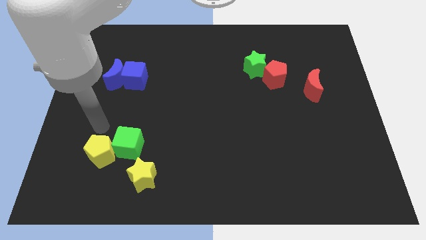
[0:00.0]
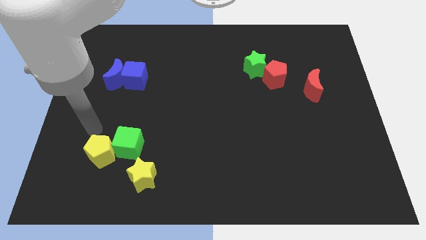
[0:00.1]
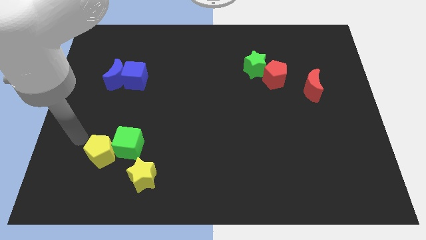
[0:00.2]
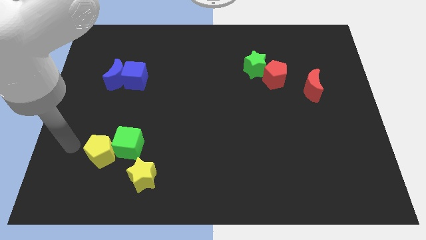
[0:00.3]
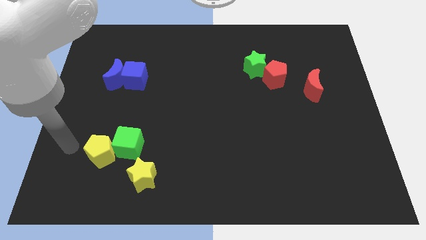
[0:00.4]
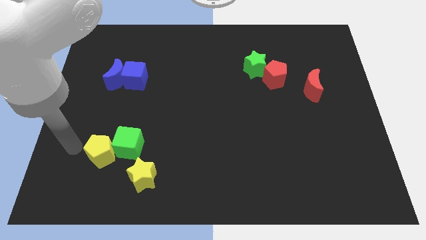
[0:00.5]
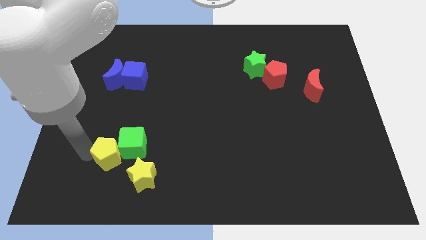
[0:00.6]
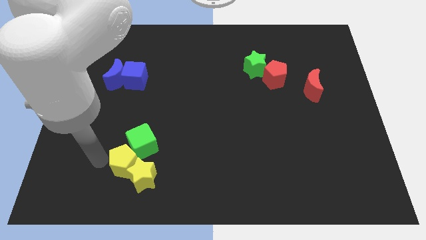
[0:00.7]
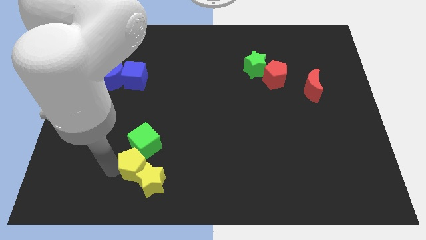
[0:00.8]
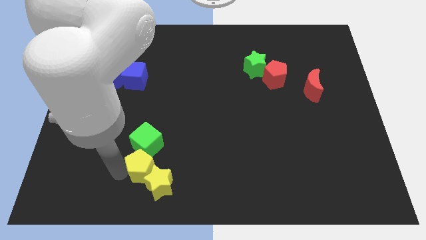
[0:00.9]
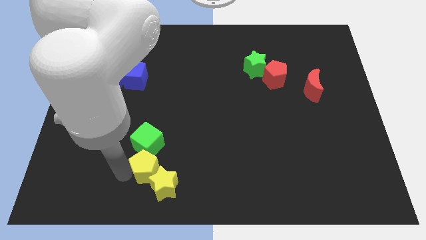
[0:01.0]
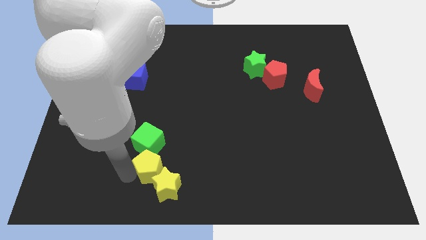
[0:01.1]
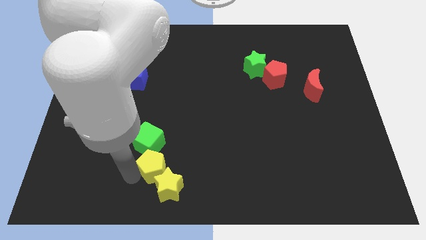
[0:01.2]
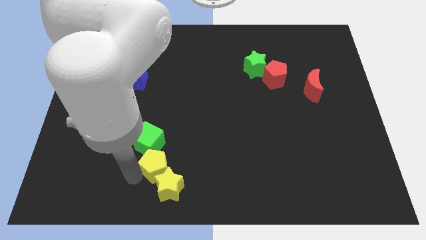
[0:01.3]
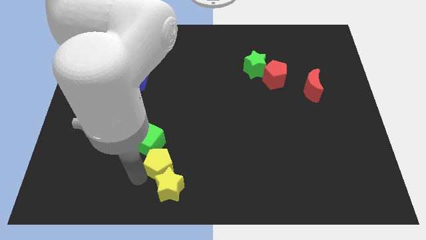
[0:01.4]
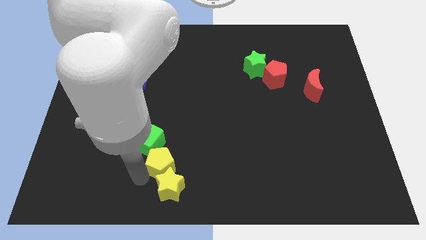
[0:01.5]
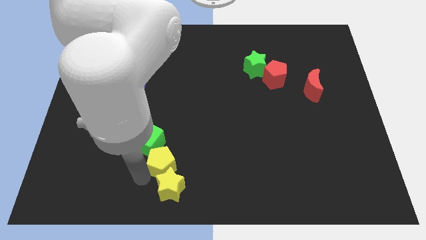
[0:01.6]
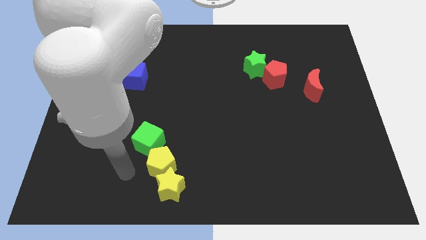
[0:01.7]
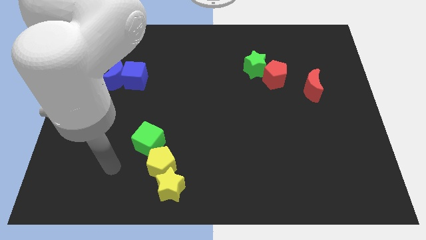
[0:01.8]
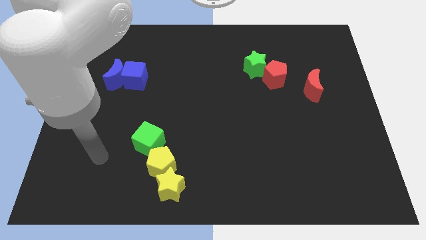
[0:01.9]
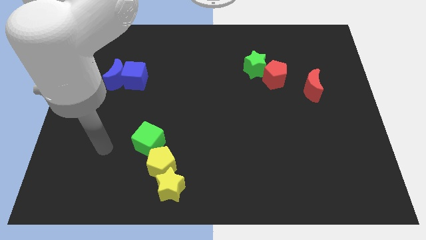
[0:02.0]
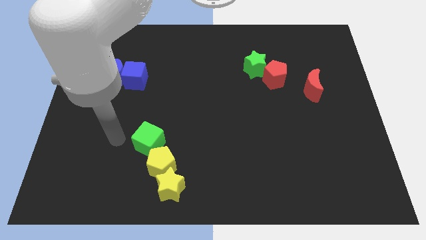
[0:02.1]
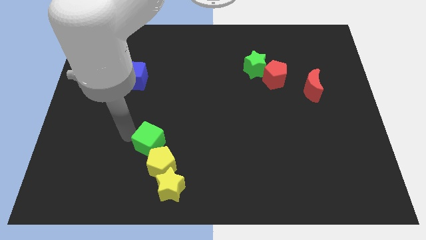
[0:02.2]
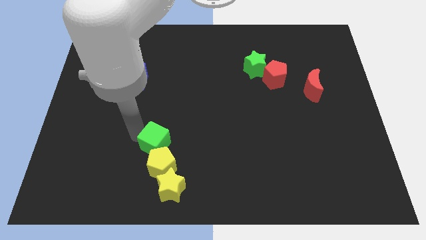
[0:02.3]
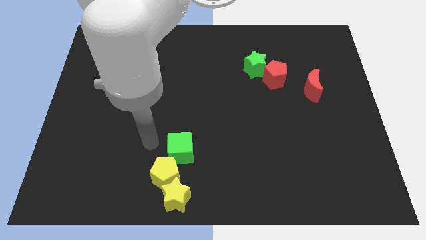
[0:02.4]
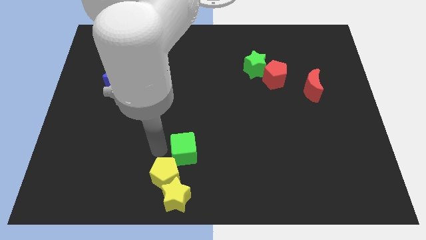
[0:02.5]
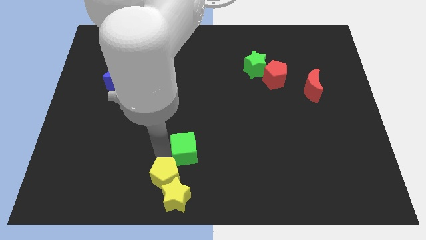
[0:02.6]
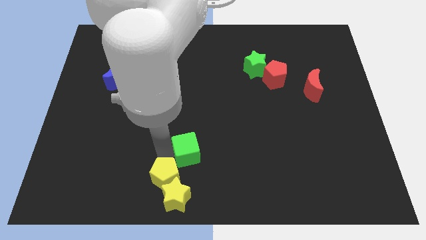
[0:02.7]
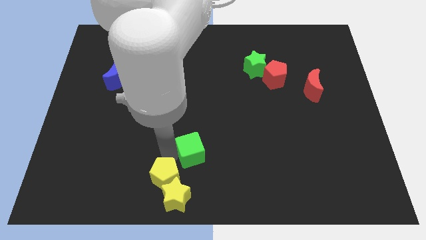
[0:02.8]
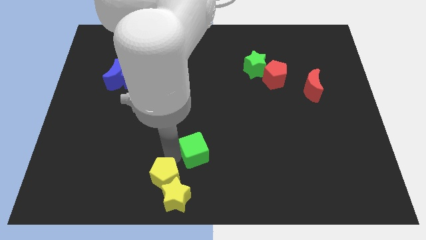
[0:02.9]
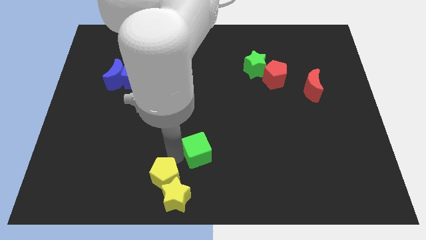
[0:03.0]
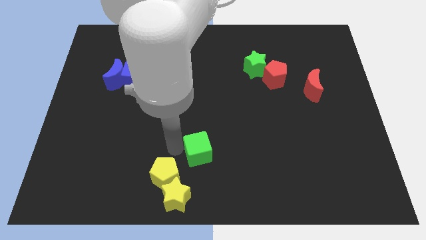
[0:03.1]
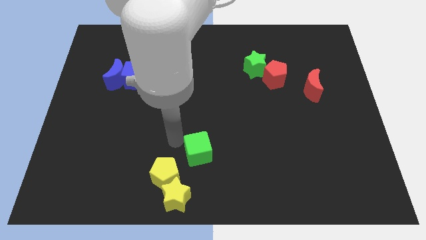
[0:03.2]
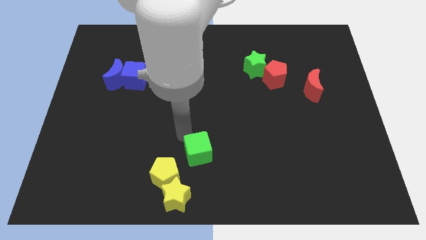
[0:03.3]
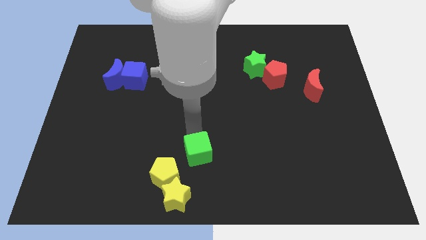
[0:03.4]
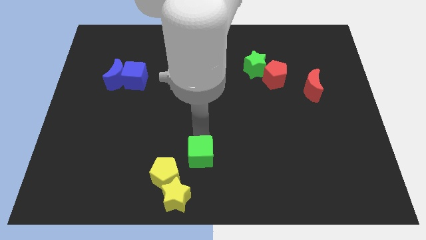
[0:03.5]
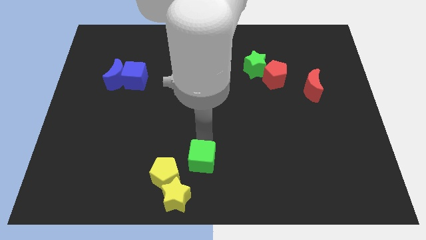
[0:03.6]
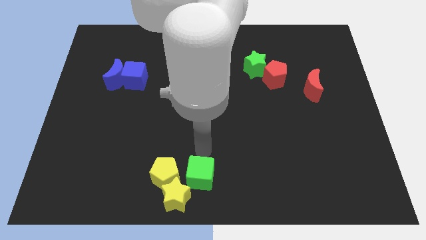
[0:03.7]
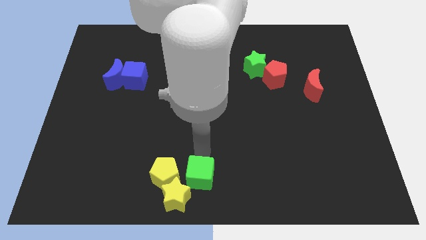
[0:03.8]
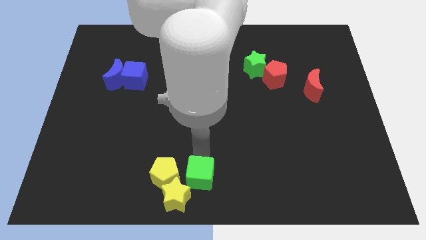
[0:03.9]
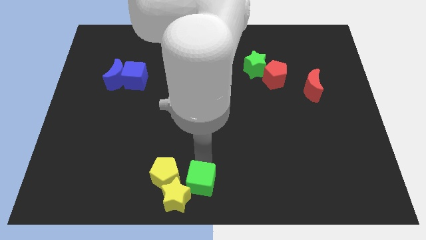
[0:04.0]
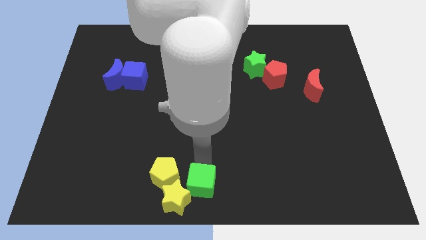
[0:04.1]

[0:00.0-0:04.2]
push yellow pentagon into yellow star and place green cube to the right side of yellow star

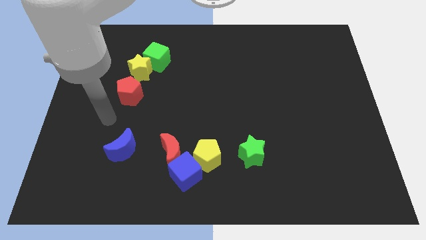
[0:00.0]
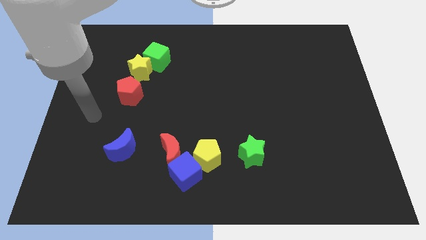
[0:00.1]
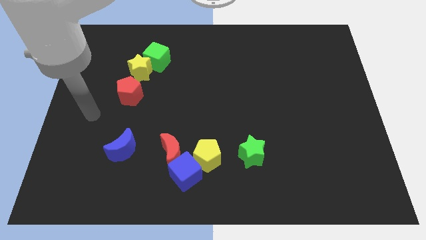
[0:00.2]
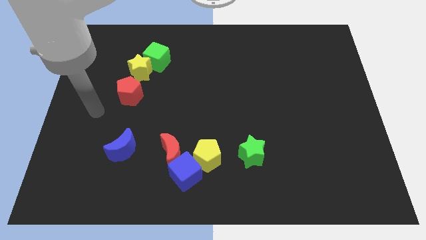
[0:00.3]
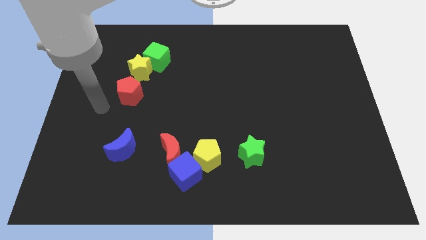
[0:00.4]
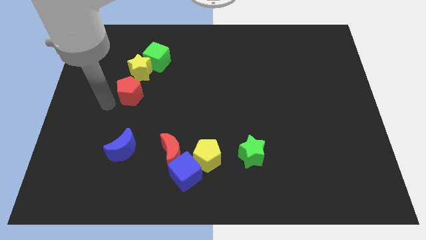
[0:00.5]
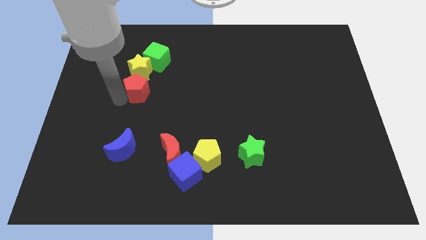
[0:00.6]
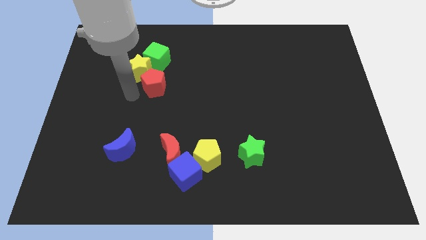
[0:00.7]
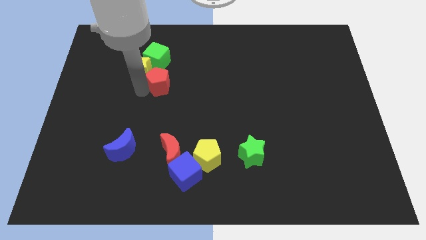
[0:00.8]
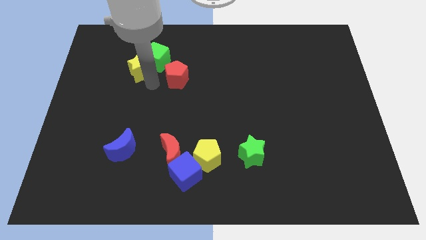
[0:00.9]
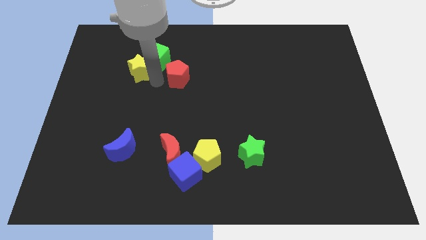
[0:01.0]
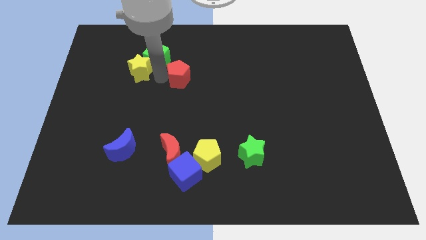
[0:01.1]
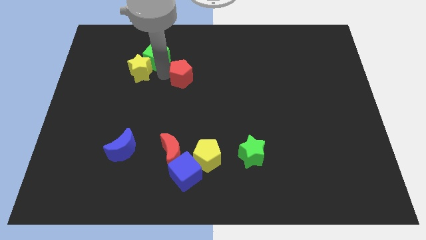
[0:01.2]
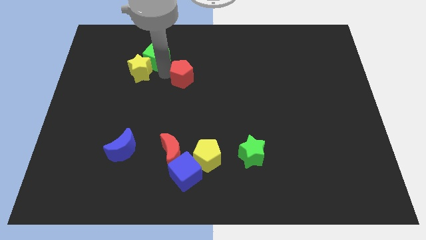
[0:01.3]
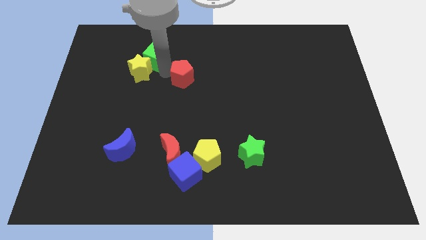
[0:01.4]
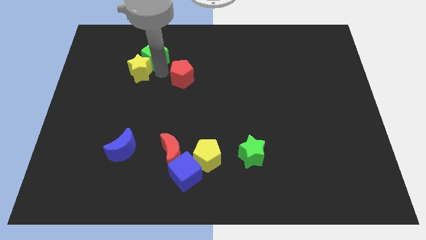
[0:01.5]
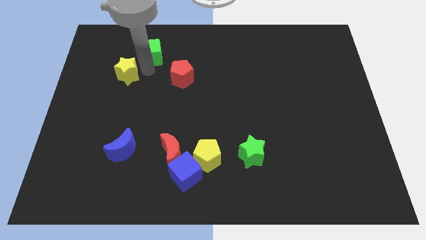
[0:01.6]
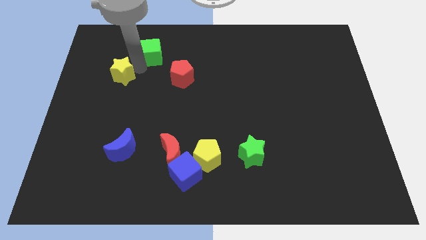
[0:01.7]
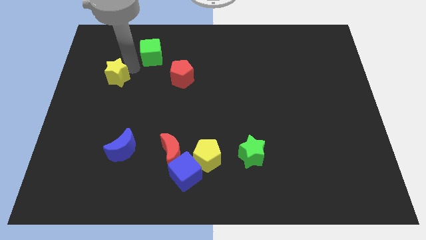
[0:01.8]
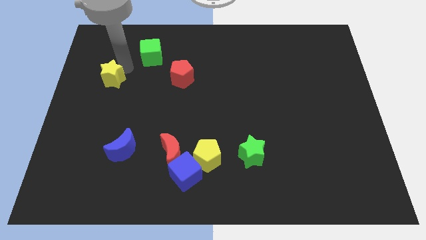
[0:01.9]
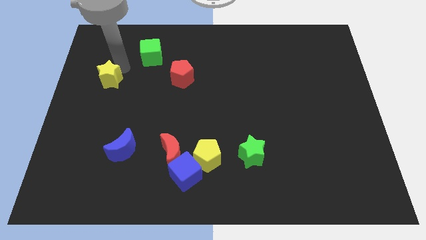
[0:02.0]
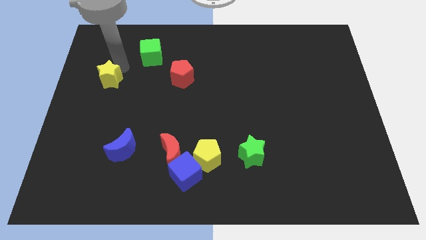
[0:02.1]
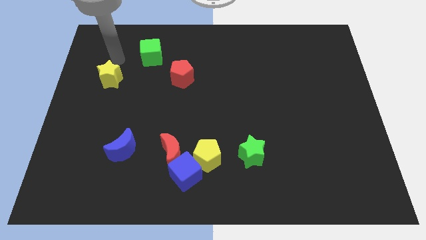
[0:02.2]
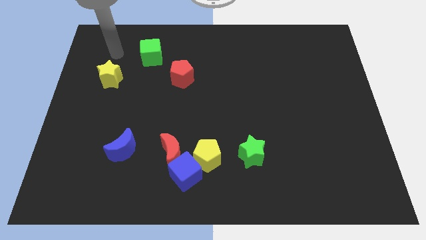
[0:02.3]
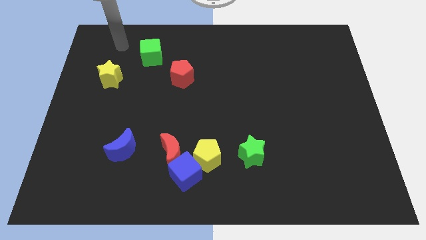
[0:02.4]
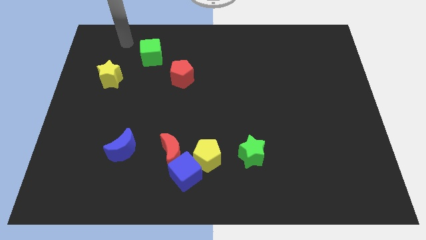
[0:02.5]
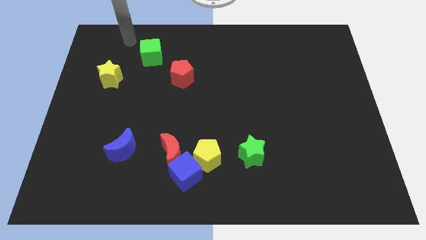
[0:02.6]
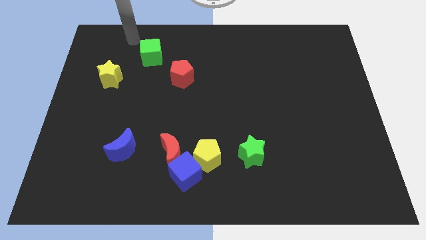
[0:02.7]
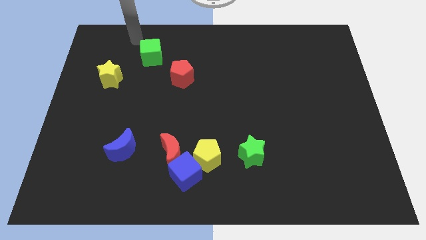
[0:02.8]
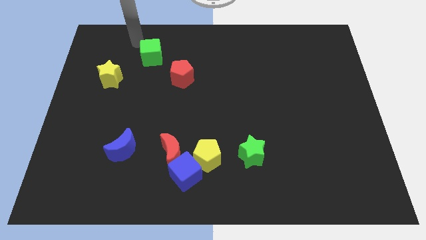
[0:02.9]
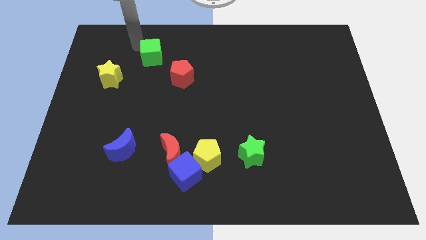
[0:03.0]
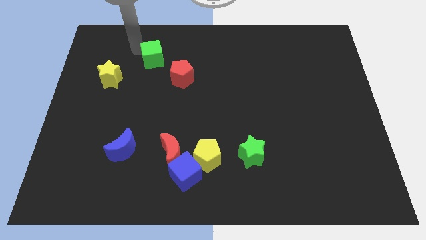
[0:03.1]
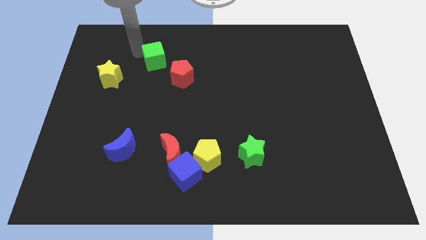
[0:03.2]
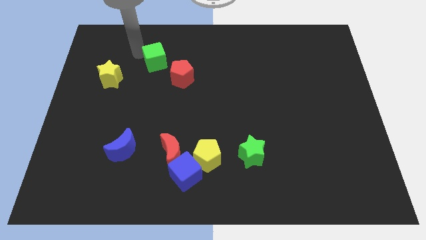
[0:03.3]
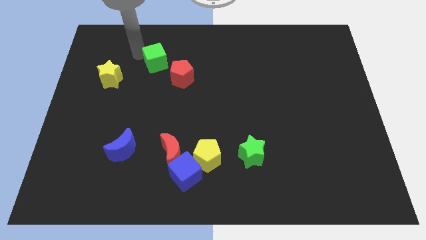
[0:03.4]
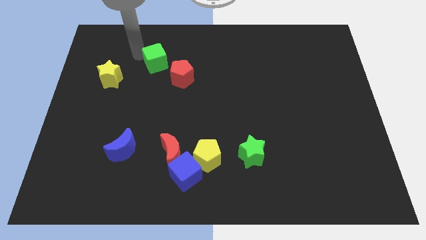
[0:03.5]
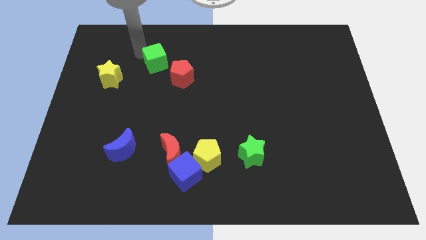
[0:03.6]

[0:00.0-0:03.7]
place the green cube diagonal to the red pentagon

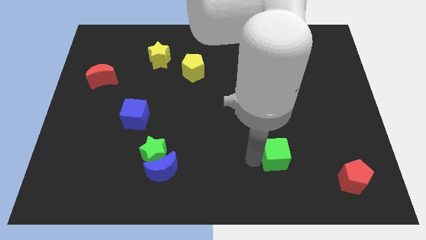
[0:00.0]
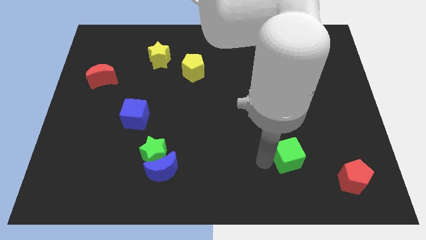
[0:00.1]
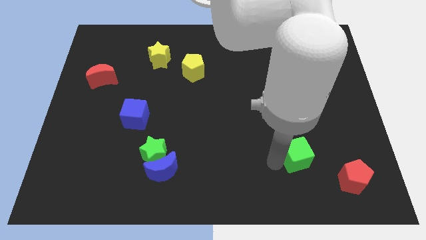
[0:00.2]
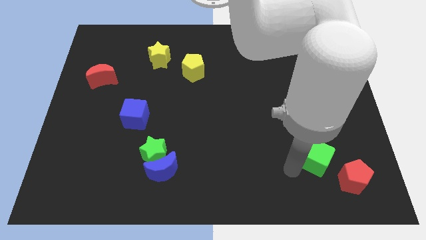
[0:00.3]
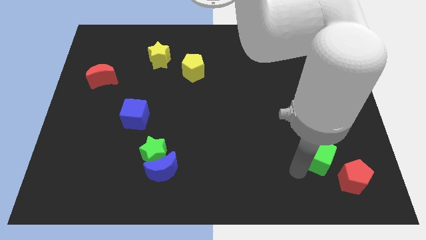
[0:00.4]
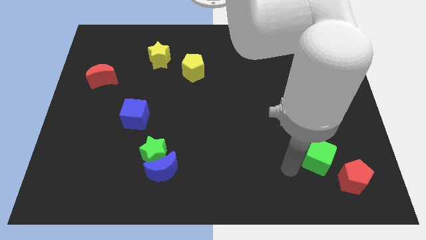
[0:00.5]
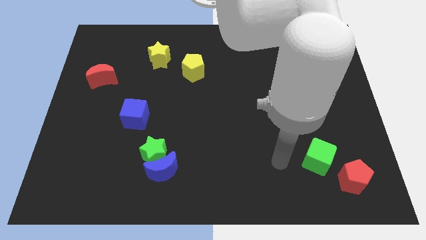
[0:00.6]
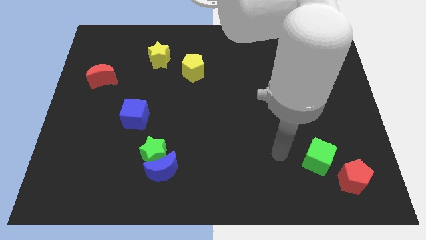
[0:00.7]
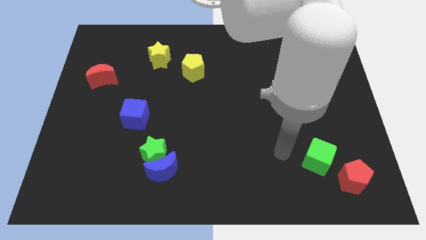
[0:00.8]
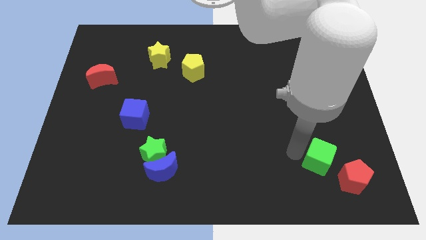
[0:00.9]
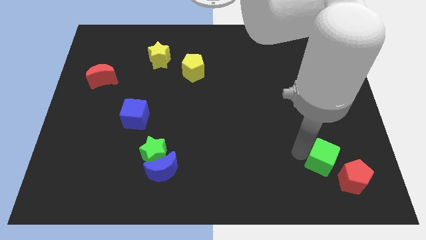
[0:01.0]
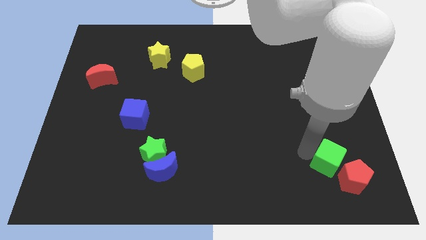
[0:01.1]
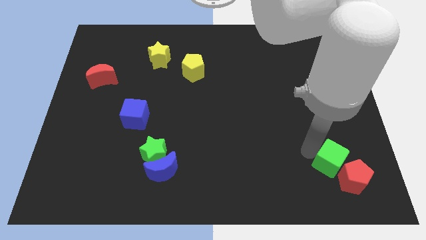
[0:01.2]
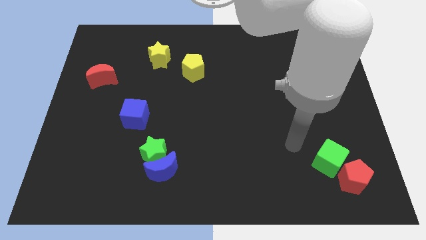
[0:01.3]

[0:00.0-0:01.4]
place the green cube above the red pentagon to the right bottom of the board
